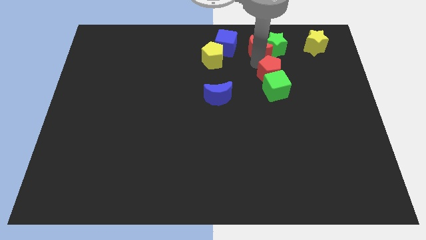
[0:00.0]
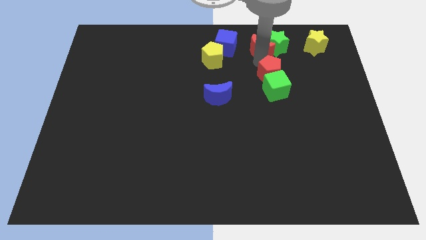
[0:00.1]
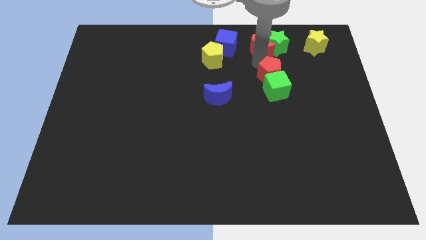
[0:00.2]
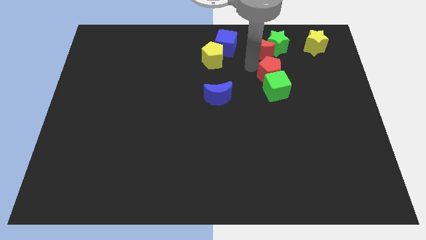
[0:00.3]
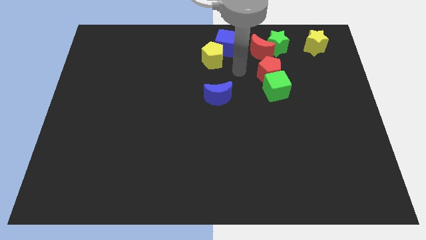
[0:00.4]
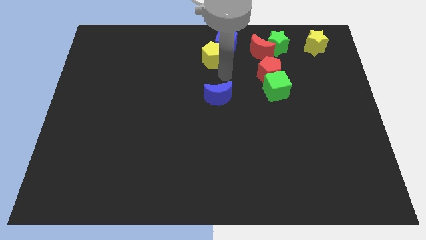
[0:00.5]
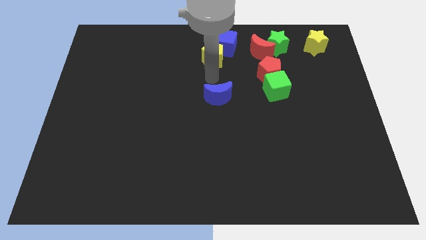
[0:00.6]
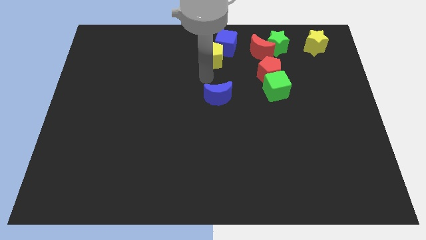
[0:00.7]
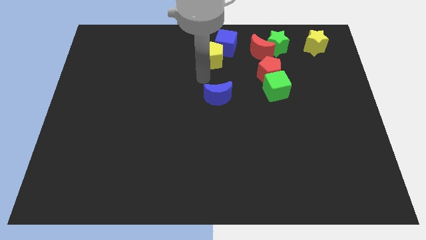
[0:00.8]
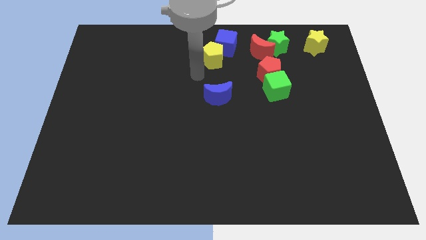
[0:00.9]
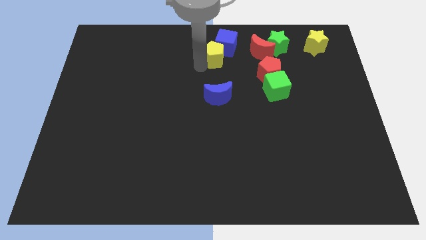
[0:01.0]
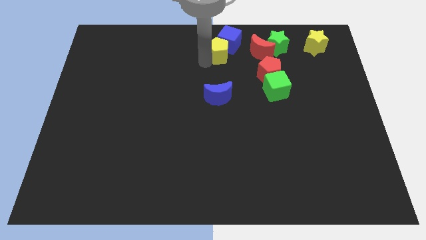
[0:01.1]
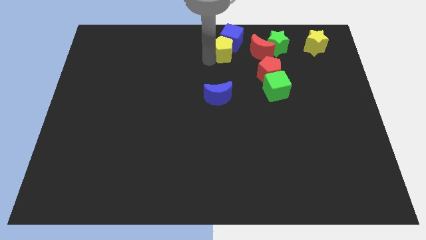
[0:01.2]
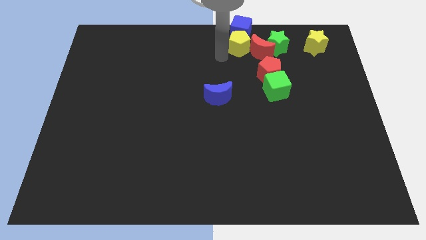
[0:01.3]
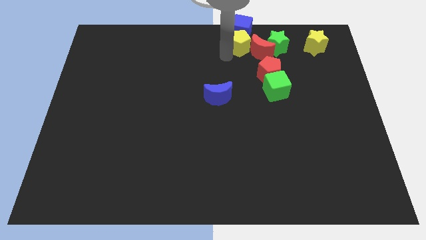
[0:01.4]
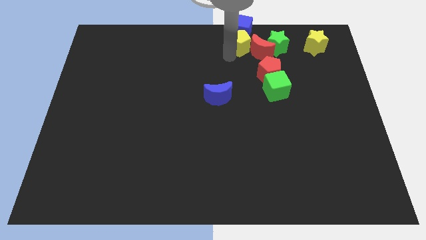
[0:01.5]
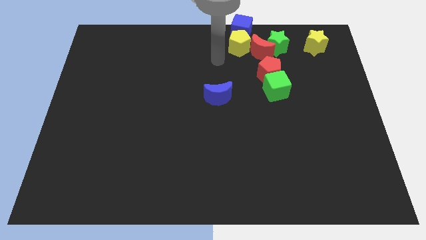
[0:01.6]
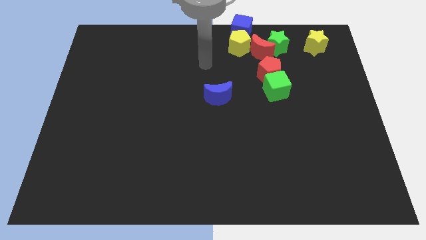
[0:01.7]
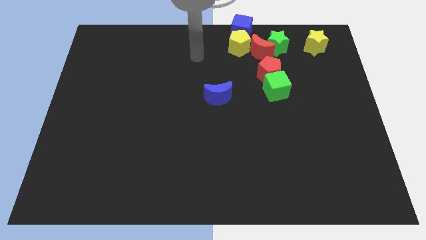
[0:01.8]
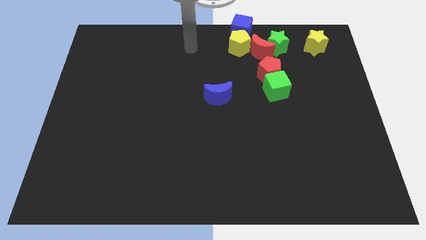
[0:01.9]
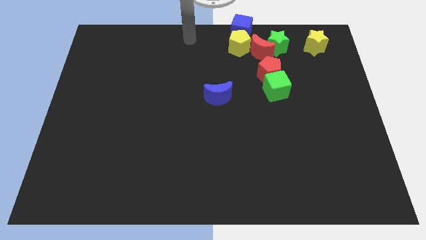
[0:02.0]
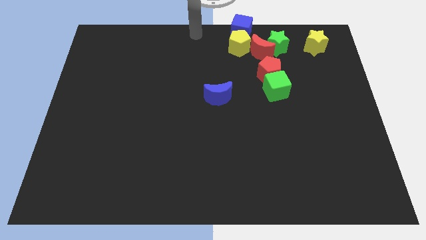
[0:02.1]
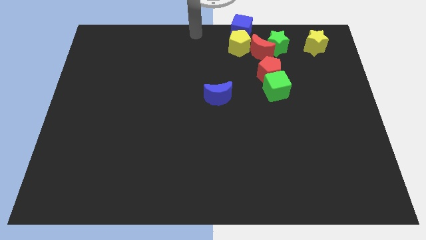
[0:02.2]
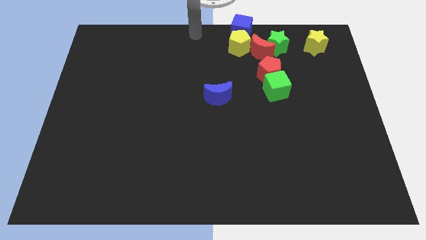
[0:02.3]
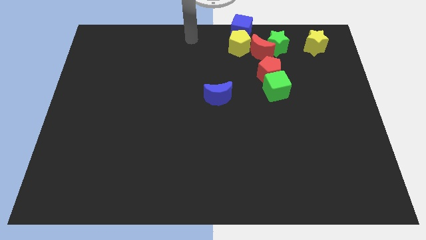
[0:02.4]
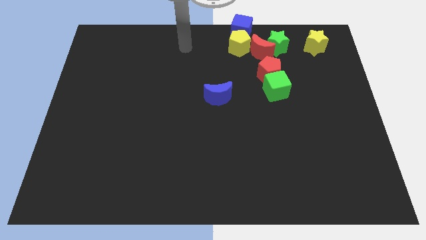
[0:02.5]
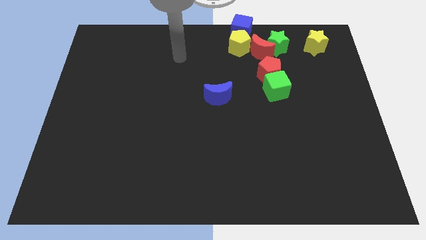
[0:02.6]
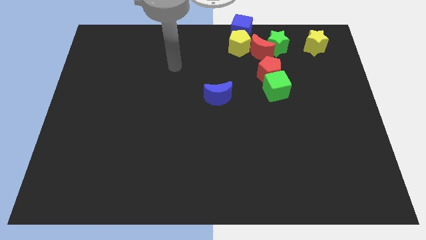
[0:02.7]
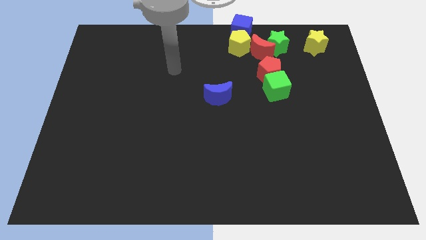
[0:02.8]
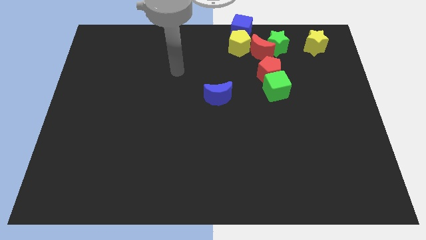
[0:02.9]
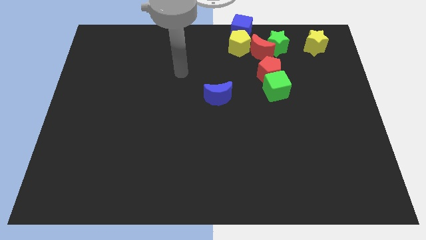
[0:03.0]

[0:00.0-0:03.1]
move the yellow pentagon into red moon

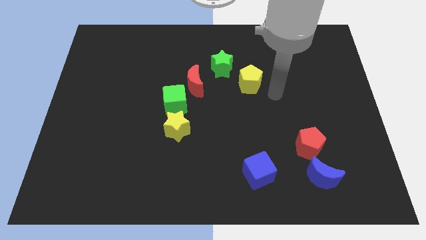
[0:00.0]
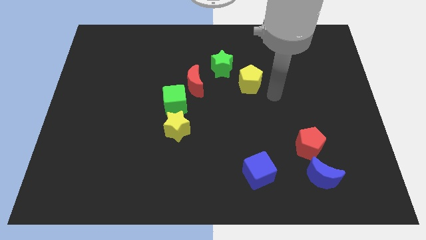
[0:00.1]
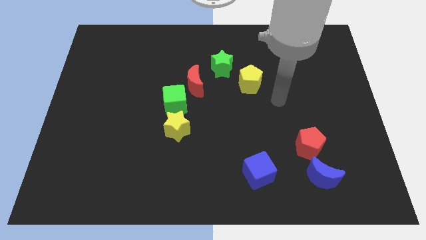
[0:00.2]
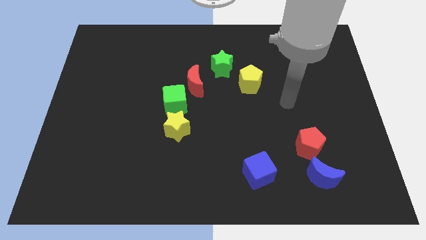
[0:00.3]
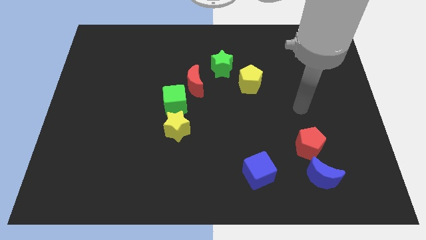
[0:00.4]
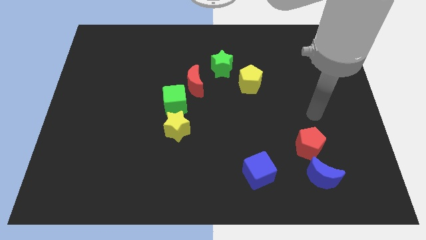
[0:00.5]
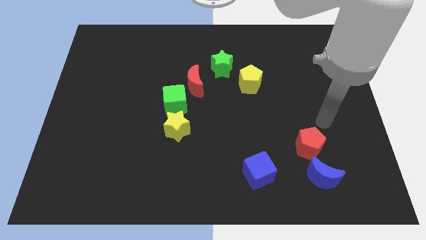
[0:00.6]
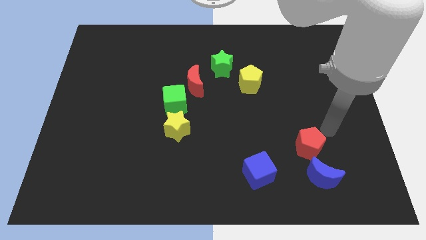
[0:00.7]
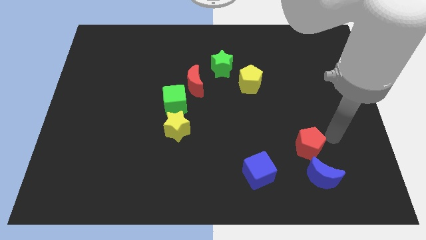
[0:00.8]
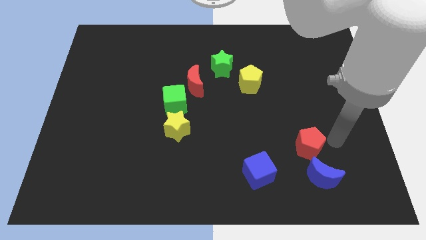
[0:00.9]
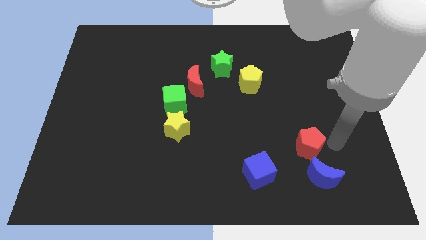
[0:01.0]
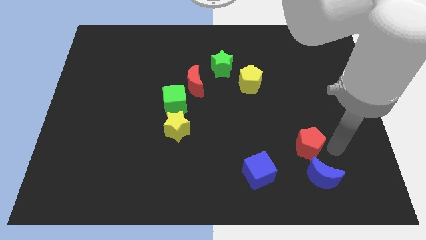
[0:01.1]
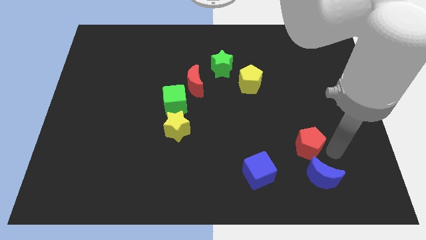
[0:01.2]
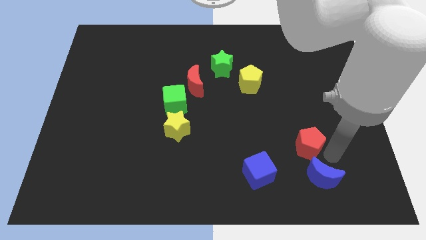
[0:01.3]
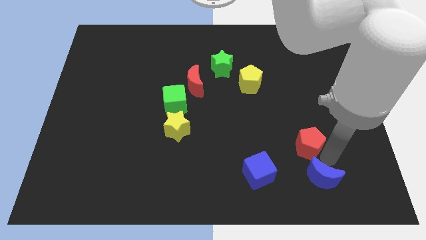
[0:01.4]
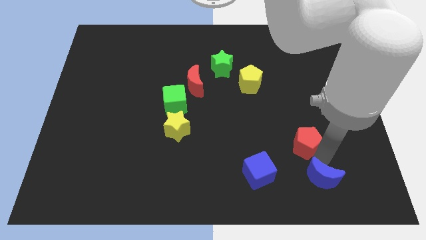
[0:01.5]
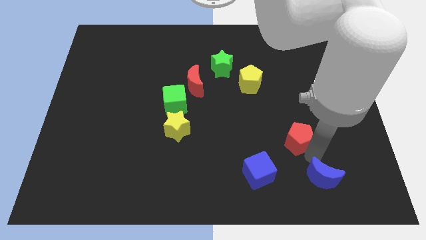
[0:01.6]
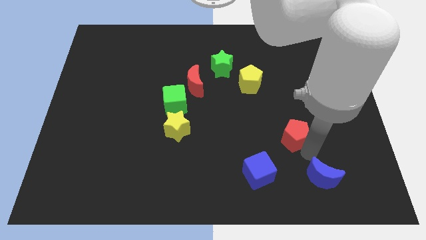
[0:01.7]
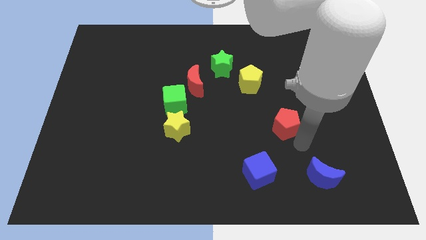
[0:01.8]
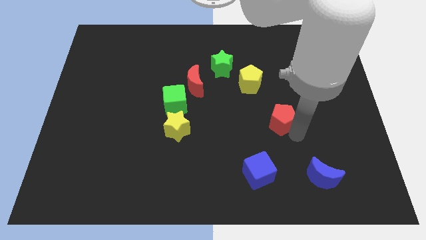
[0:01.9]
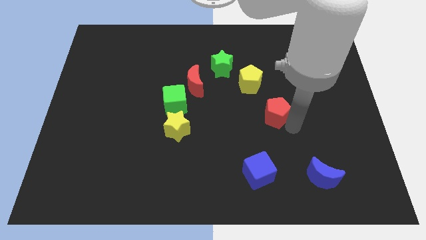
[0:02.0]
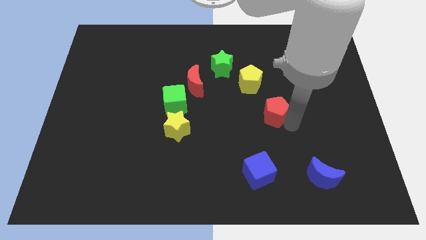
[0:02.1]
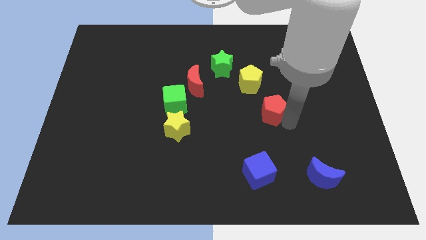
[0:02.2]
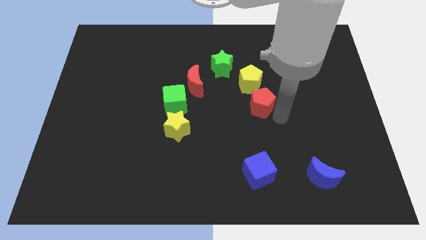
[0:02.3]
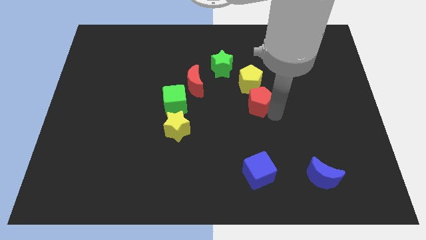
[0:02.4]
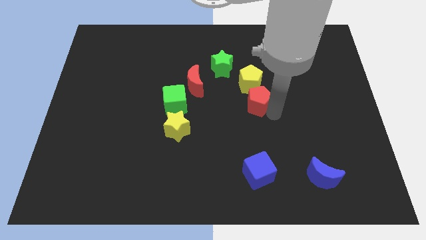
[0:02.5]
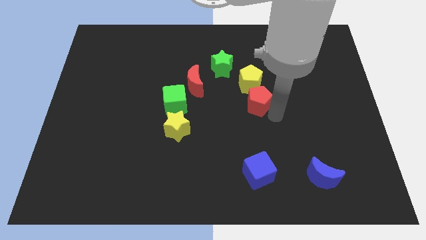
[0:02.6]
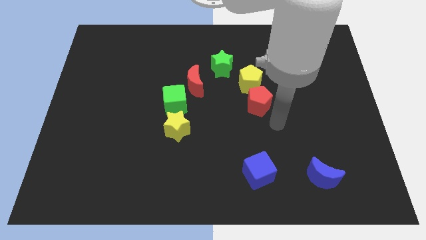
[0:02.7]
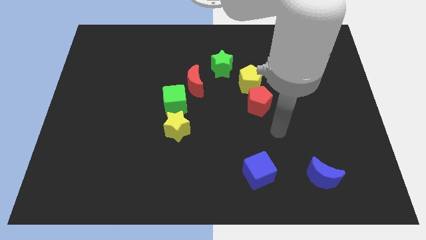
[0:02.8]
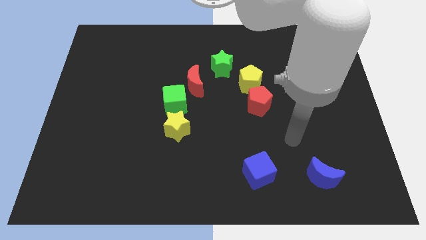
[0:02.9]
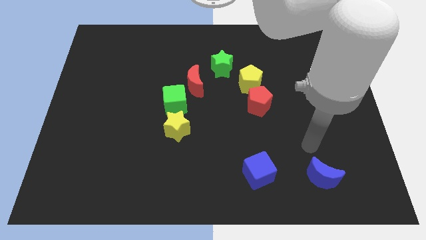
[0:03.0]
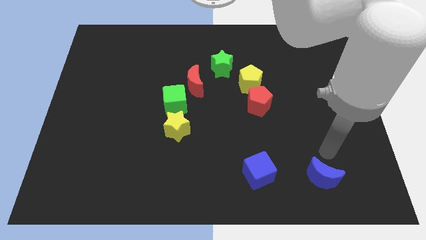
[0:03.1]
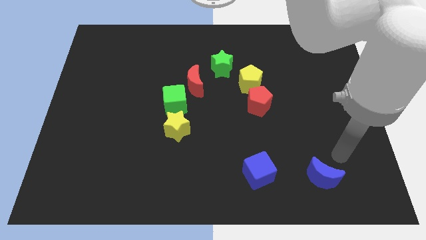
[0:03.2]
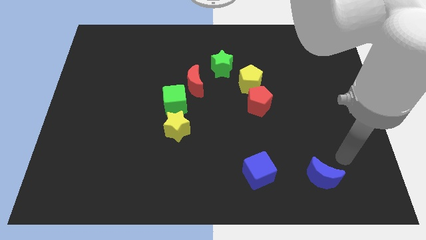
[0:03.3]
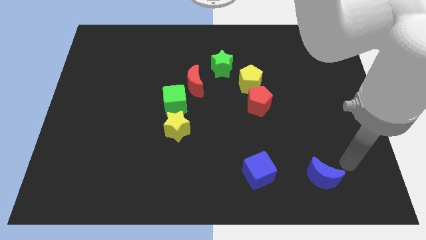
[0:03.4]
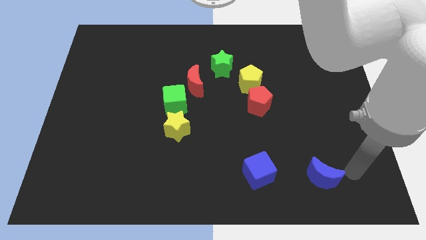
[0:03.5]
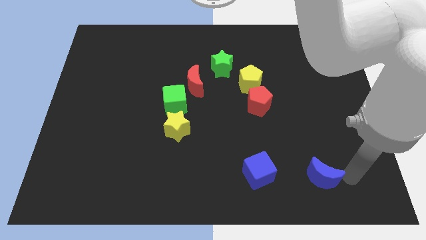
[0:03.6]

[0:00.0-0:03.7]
place the red pentagon below the yellow pentagon

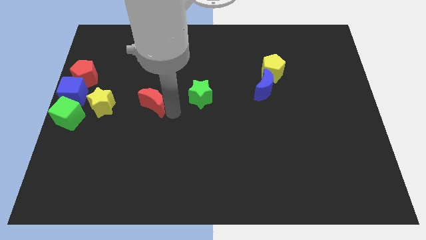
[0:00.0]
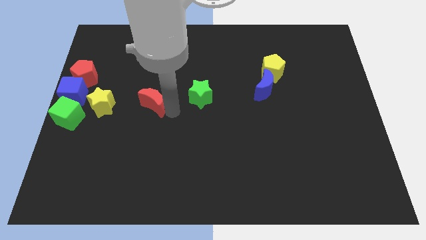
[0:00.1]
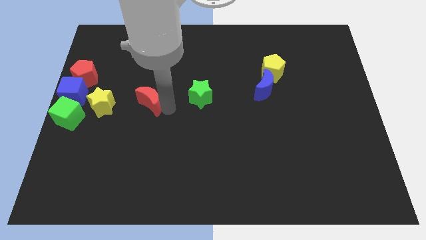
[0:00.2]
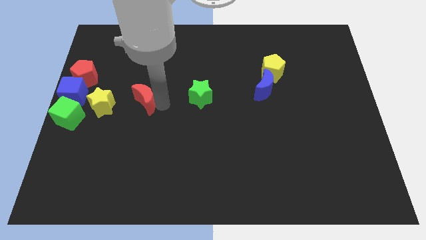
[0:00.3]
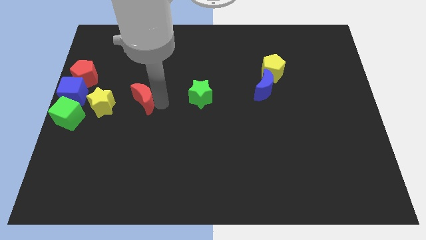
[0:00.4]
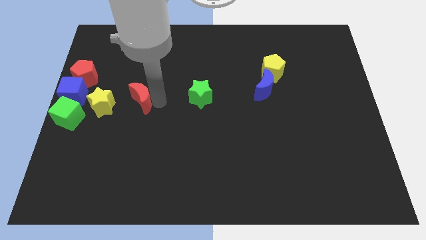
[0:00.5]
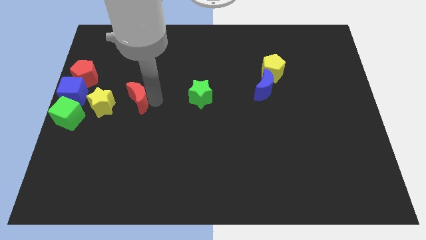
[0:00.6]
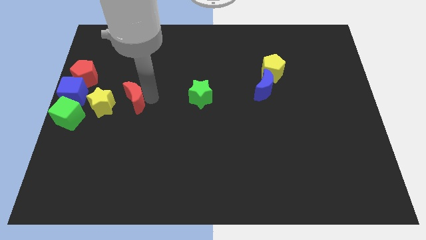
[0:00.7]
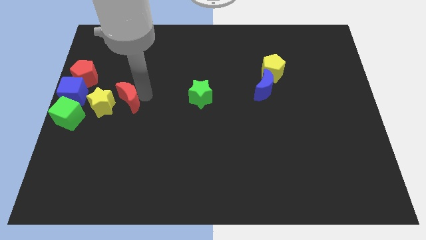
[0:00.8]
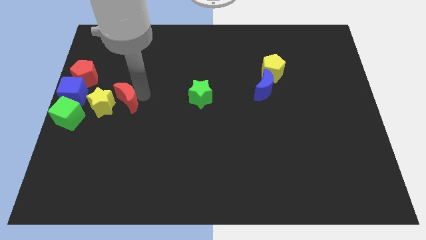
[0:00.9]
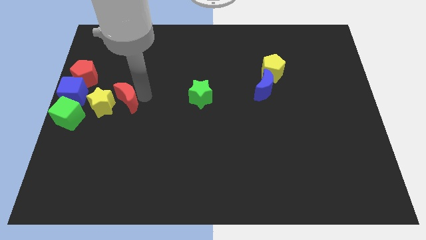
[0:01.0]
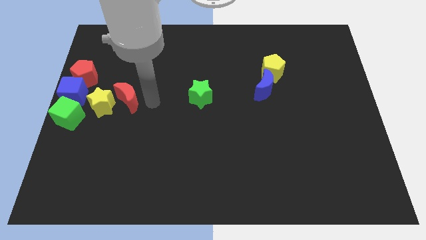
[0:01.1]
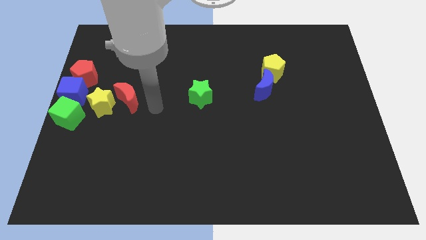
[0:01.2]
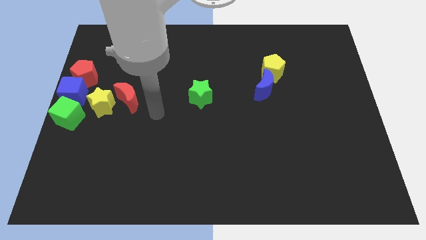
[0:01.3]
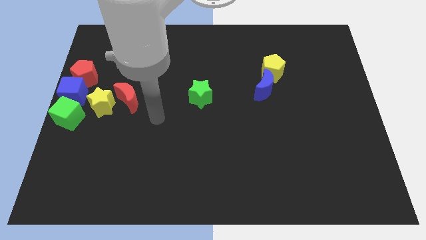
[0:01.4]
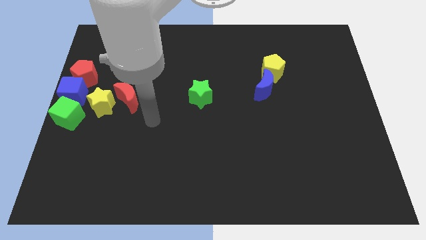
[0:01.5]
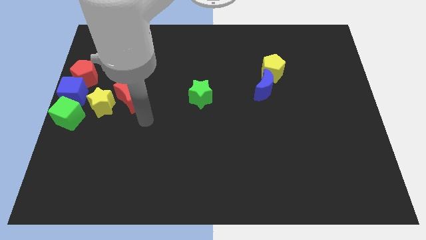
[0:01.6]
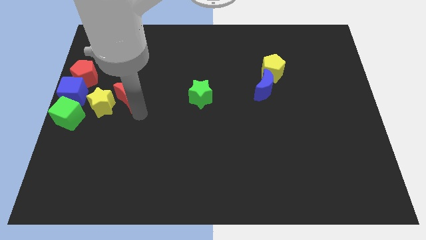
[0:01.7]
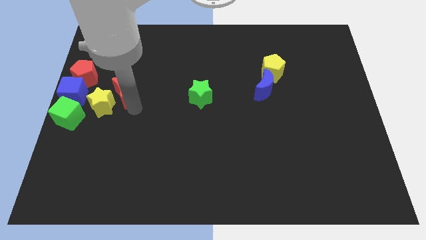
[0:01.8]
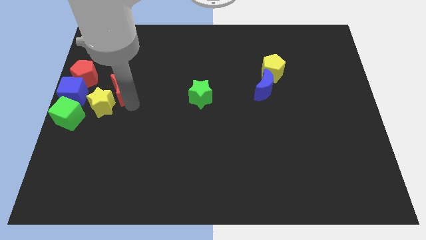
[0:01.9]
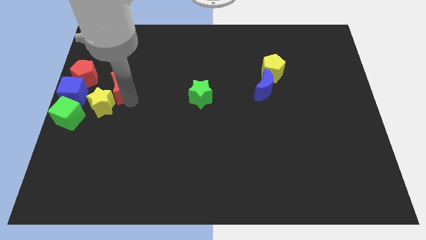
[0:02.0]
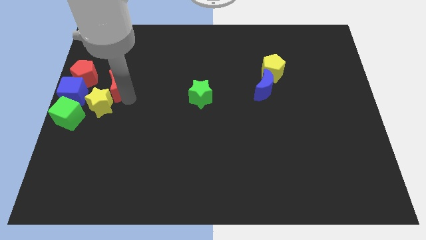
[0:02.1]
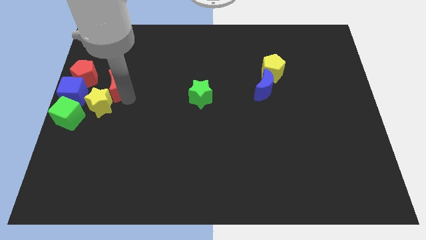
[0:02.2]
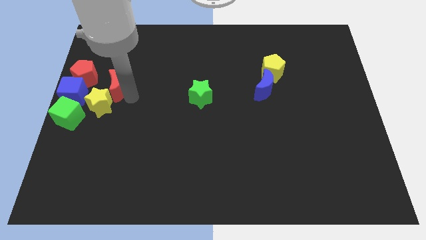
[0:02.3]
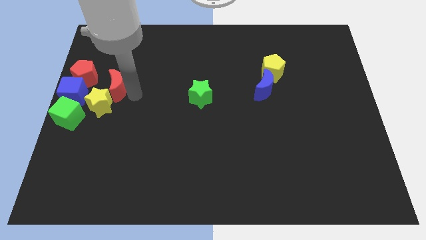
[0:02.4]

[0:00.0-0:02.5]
push the red moon into the yellow star
